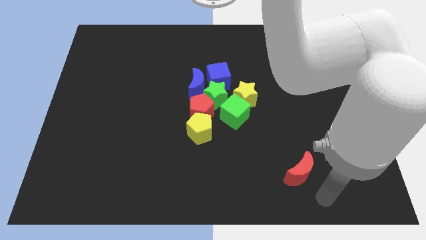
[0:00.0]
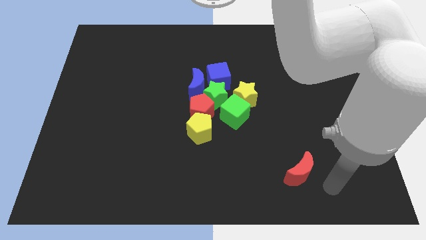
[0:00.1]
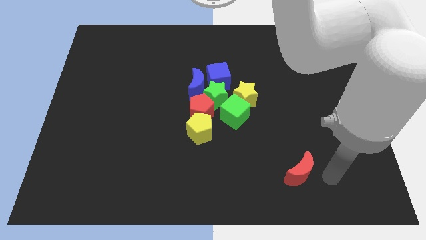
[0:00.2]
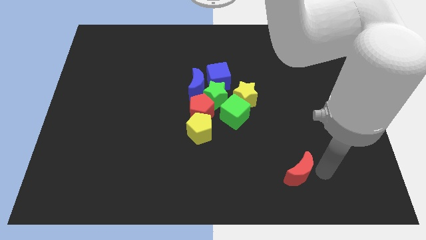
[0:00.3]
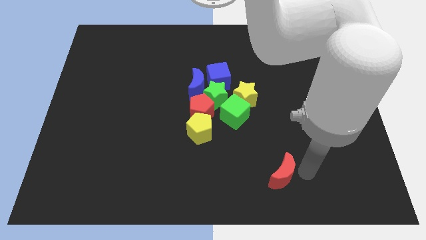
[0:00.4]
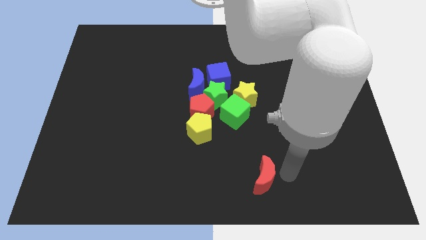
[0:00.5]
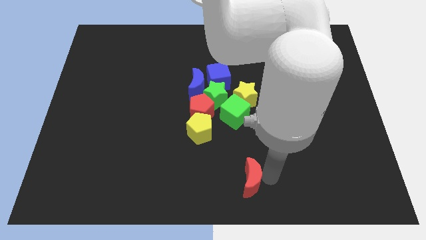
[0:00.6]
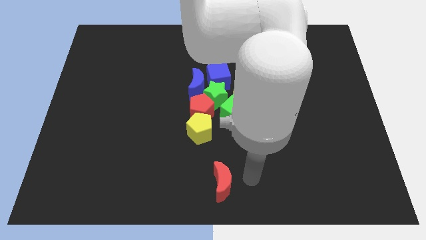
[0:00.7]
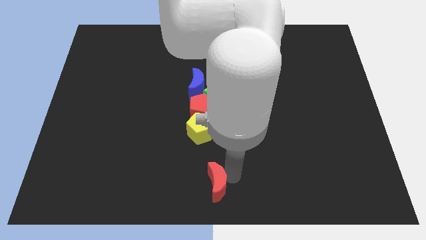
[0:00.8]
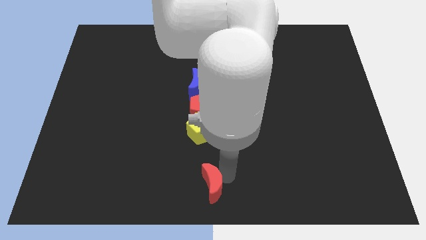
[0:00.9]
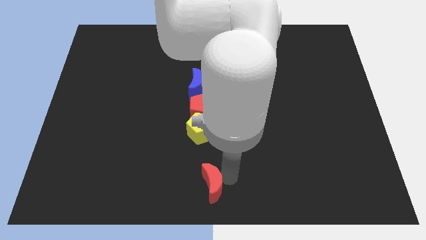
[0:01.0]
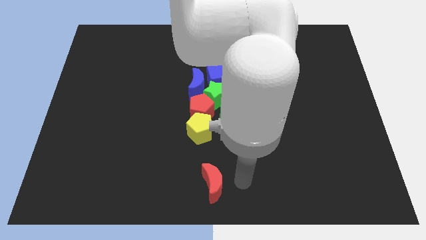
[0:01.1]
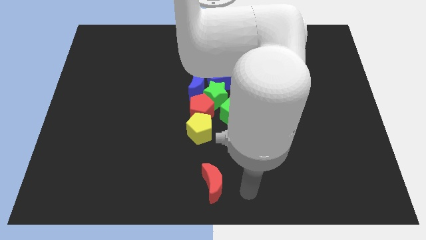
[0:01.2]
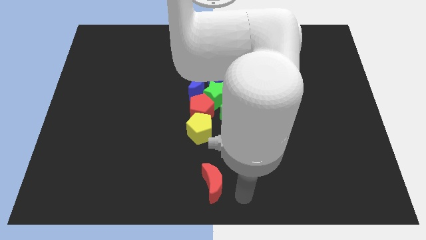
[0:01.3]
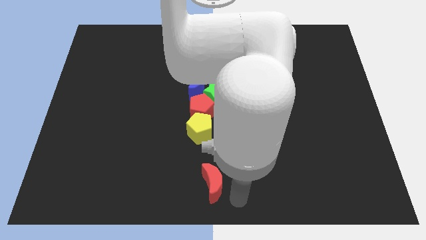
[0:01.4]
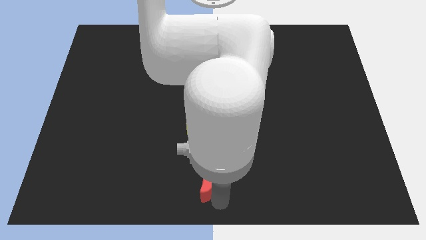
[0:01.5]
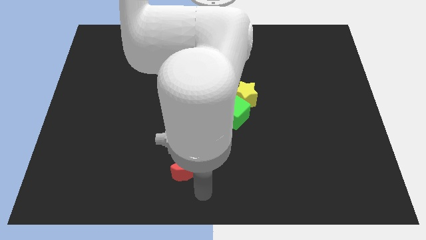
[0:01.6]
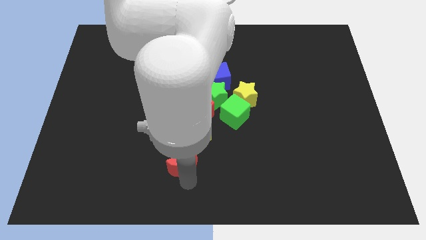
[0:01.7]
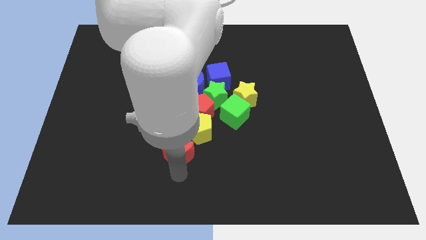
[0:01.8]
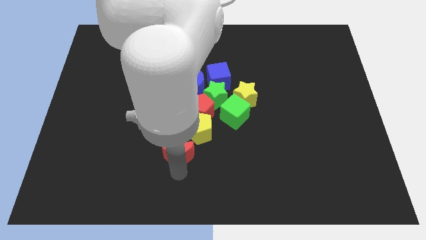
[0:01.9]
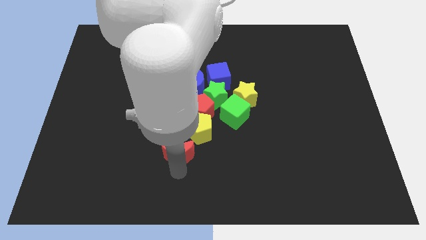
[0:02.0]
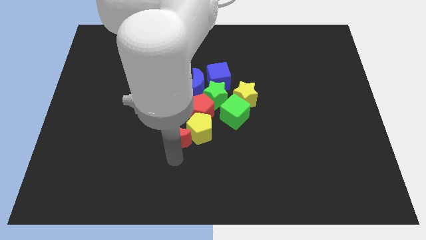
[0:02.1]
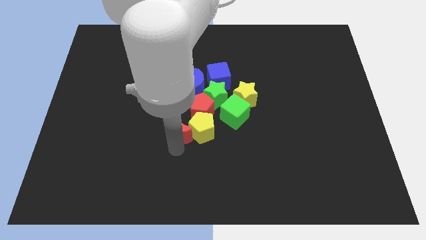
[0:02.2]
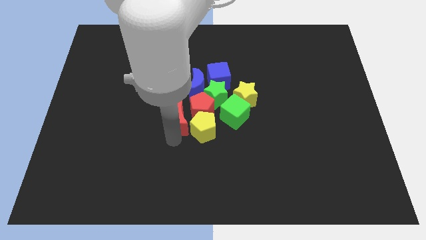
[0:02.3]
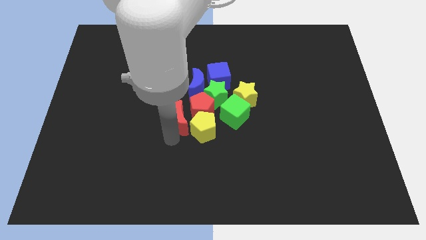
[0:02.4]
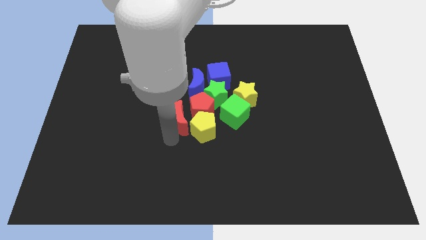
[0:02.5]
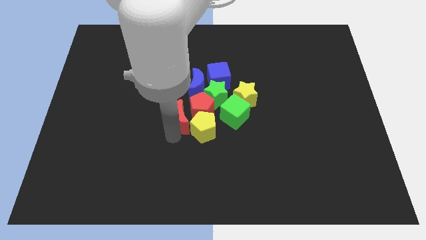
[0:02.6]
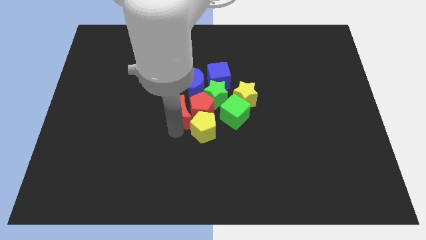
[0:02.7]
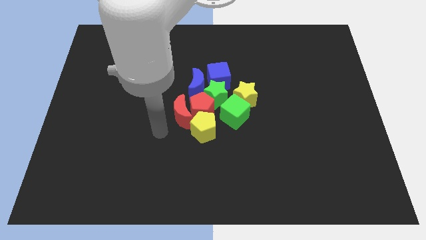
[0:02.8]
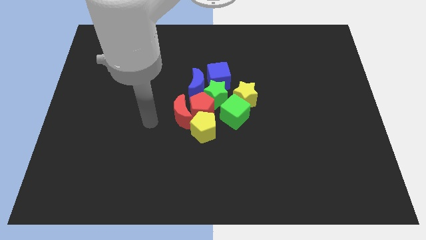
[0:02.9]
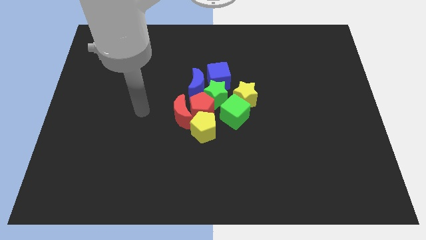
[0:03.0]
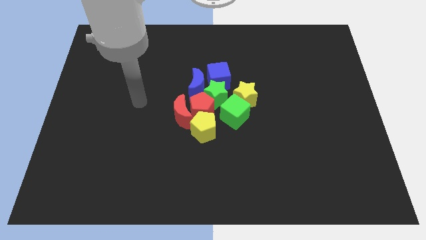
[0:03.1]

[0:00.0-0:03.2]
move the red moon into the red pentagon

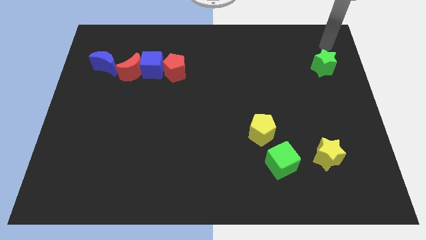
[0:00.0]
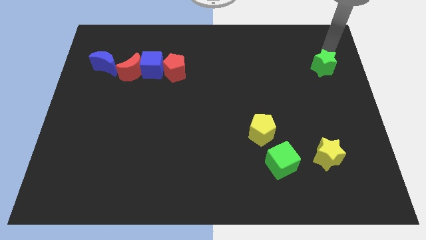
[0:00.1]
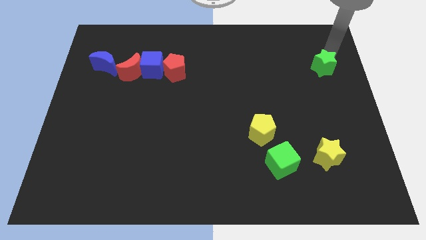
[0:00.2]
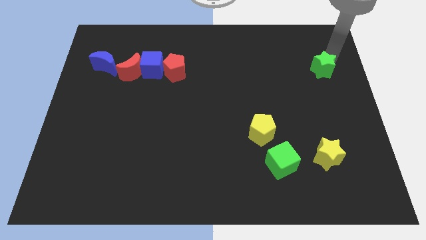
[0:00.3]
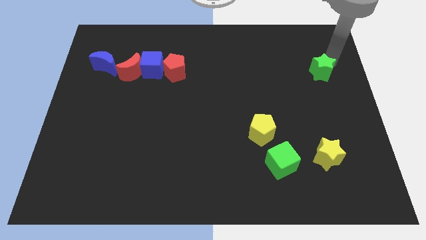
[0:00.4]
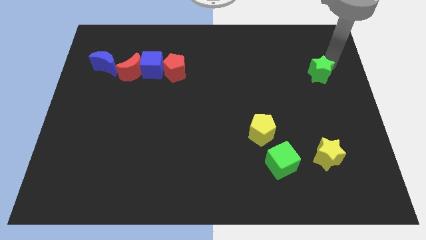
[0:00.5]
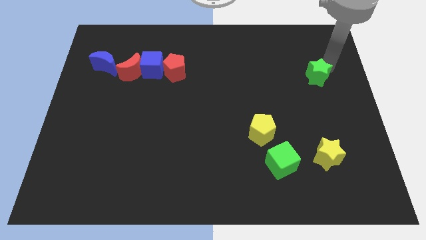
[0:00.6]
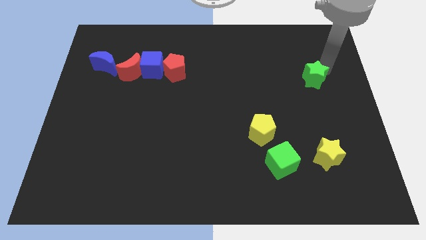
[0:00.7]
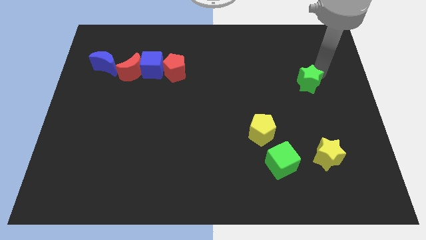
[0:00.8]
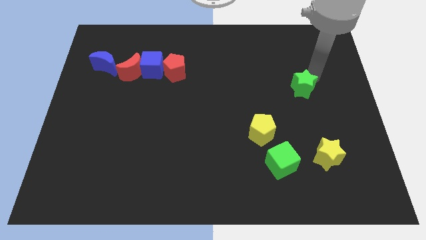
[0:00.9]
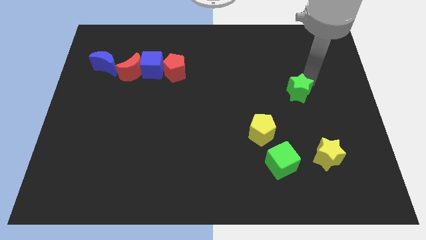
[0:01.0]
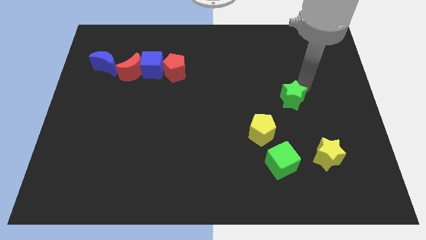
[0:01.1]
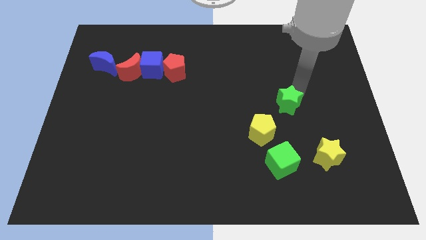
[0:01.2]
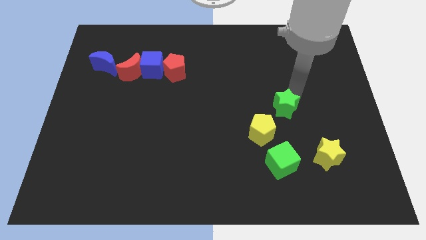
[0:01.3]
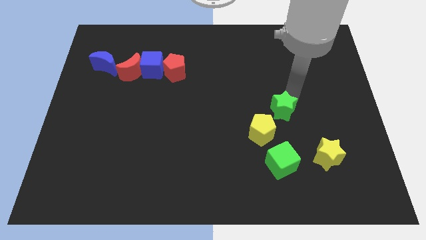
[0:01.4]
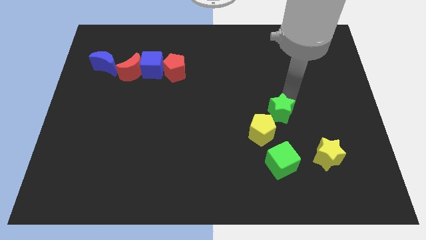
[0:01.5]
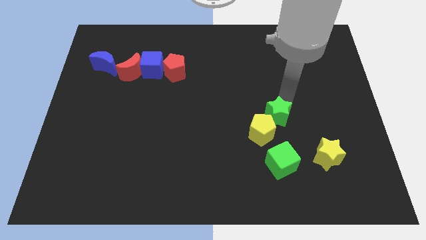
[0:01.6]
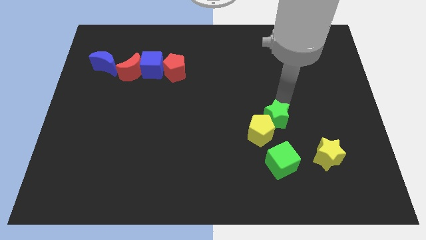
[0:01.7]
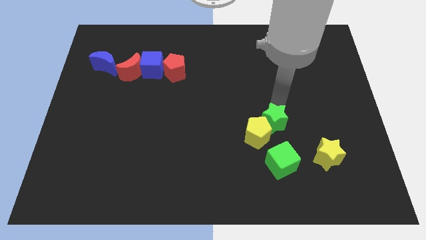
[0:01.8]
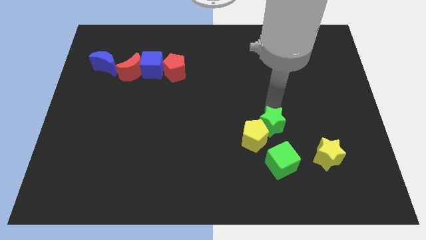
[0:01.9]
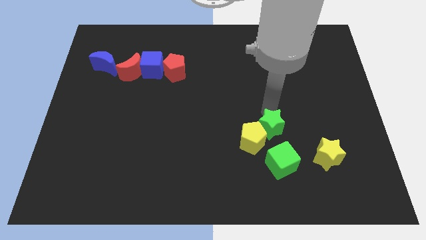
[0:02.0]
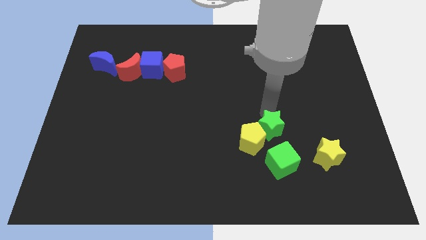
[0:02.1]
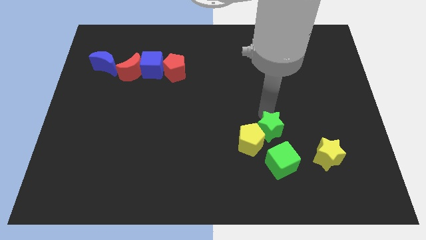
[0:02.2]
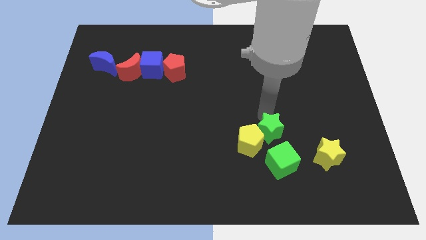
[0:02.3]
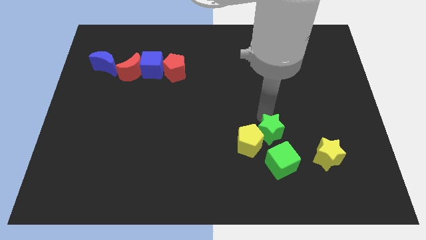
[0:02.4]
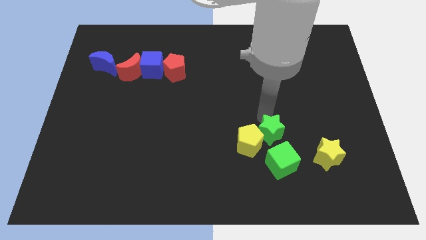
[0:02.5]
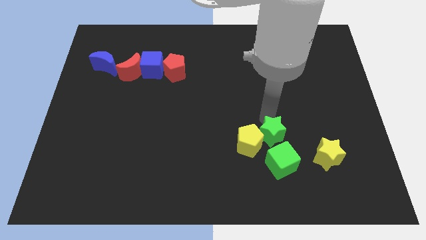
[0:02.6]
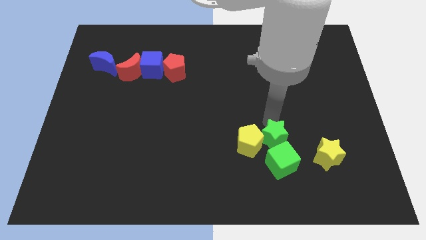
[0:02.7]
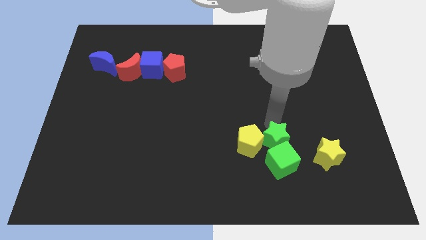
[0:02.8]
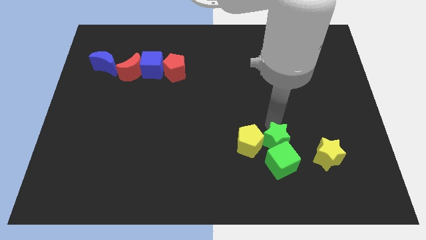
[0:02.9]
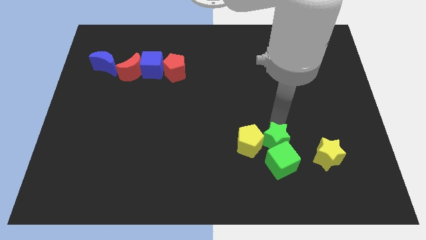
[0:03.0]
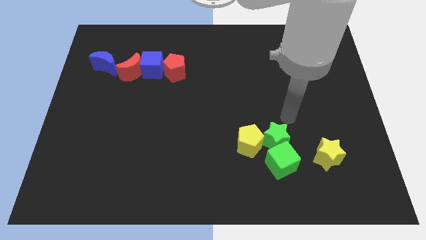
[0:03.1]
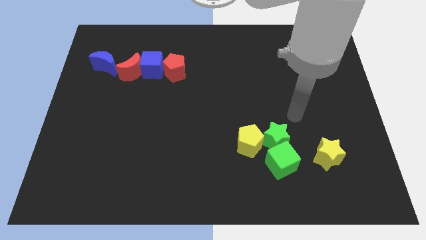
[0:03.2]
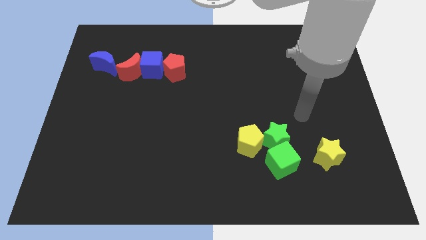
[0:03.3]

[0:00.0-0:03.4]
place the green star right to the yellow pentagon

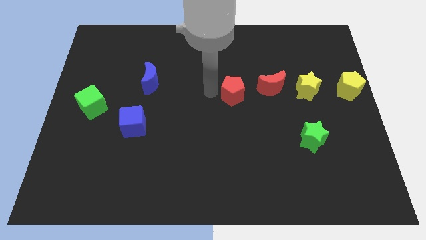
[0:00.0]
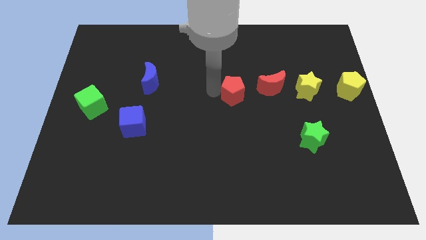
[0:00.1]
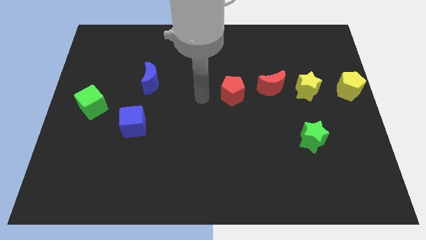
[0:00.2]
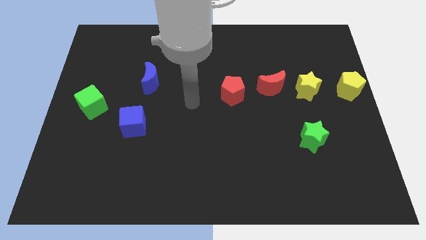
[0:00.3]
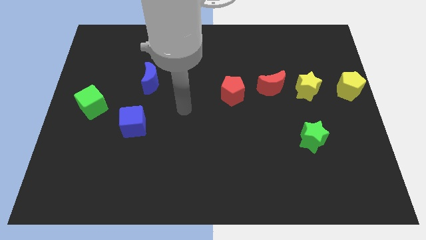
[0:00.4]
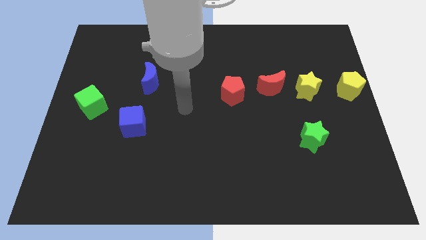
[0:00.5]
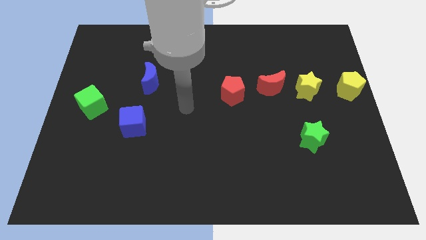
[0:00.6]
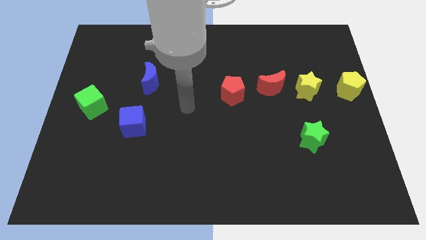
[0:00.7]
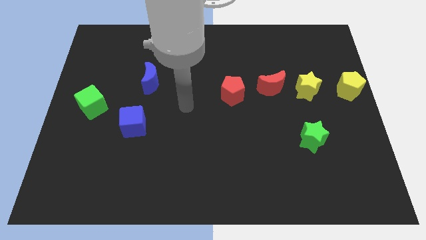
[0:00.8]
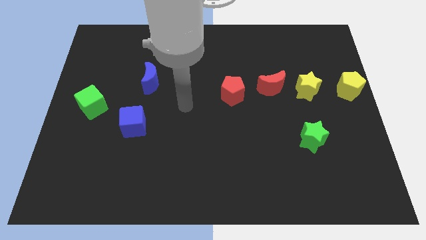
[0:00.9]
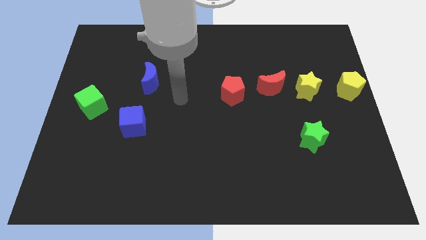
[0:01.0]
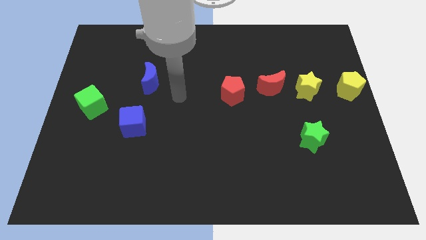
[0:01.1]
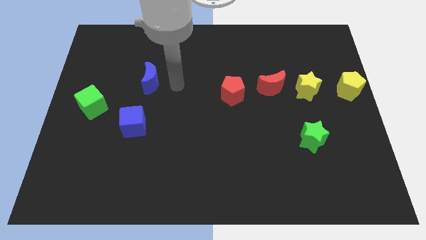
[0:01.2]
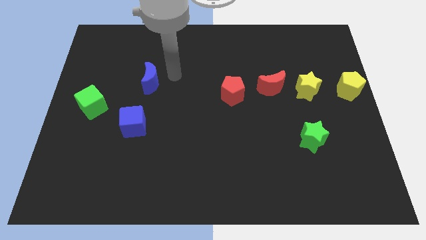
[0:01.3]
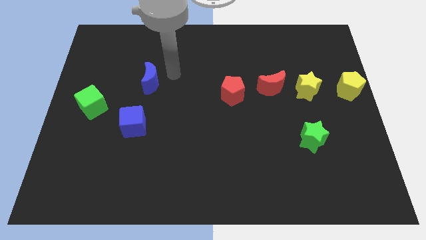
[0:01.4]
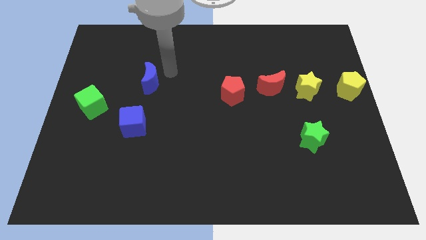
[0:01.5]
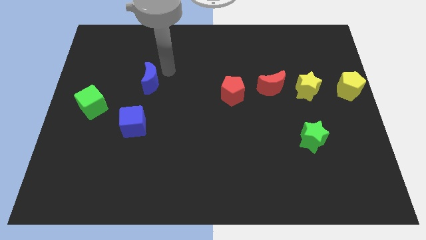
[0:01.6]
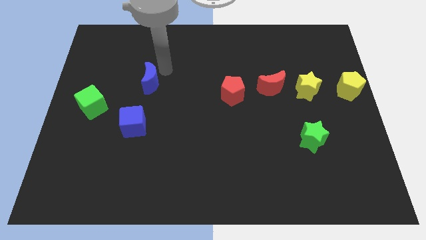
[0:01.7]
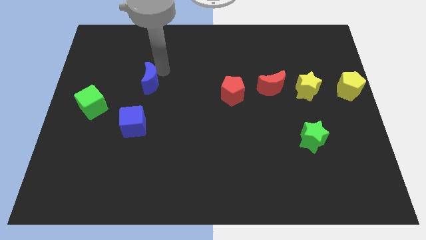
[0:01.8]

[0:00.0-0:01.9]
move your arm to the top of the blue crescent

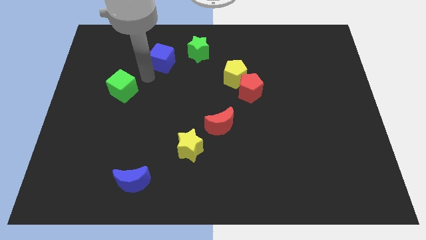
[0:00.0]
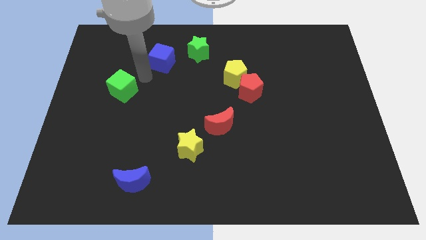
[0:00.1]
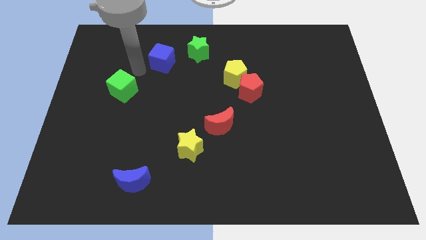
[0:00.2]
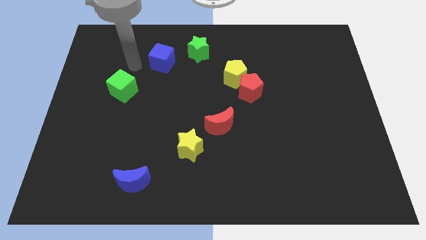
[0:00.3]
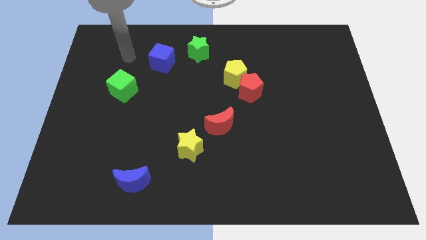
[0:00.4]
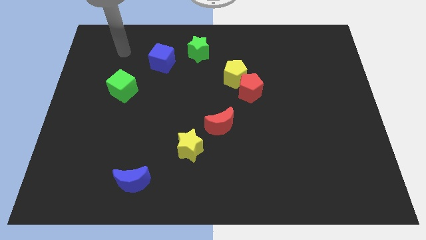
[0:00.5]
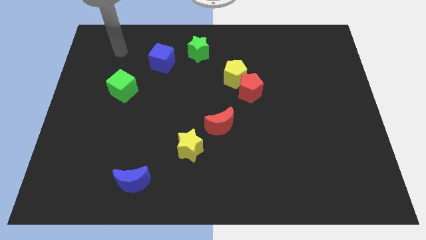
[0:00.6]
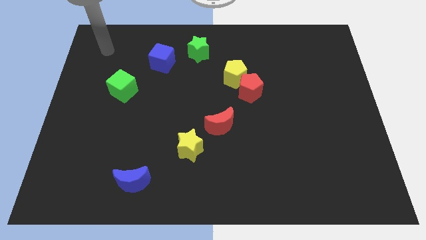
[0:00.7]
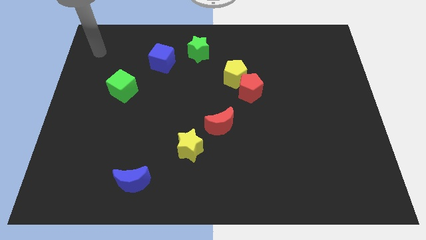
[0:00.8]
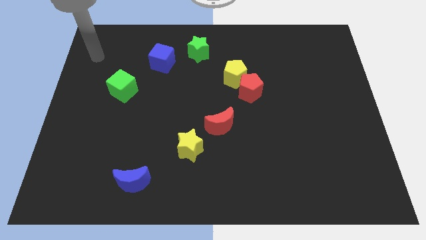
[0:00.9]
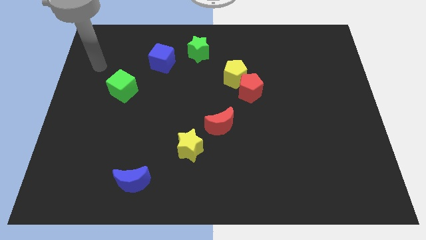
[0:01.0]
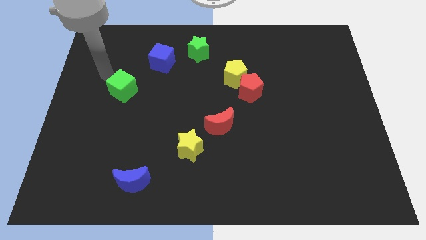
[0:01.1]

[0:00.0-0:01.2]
point your arm at the top left side of green cube
